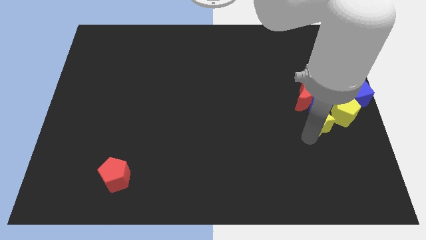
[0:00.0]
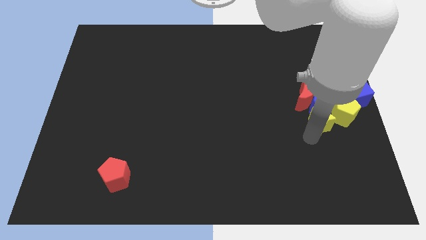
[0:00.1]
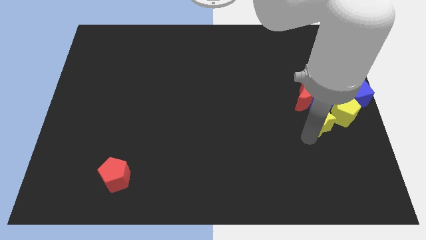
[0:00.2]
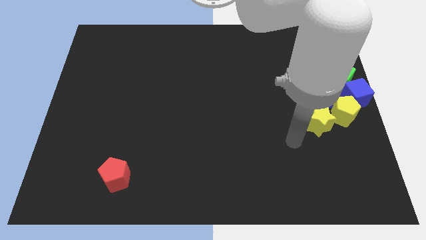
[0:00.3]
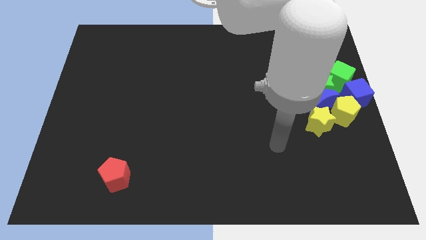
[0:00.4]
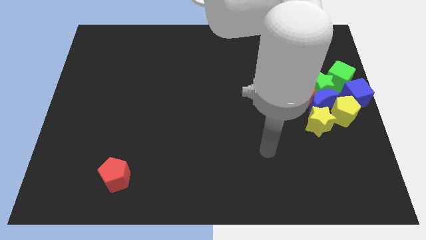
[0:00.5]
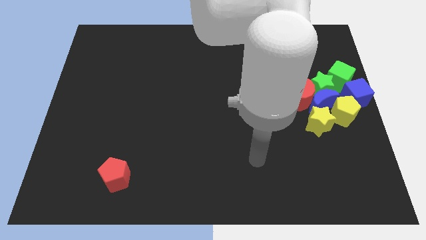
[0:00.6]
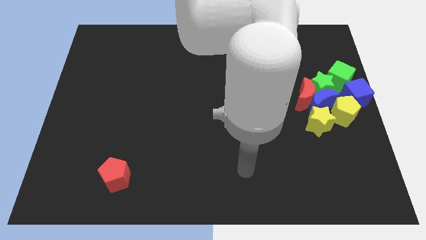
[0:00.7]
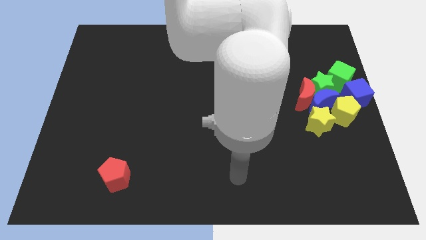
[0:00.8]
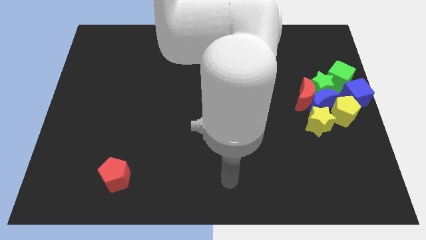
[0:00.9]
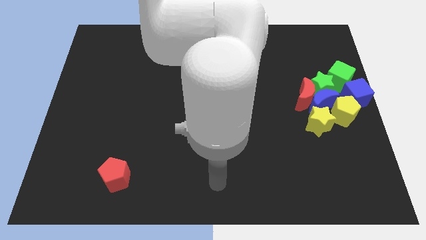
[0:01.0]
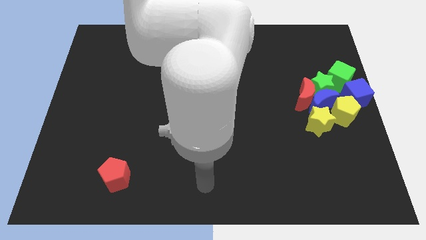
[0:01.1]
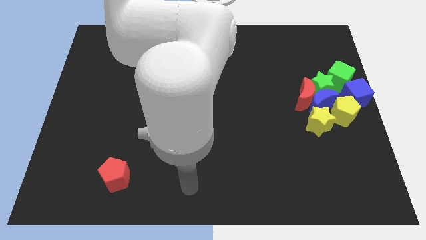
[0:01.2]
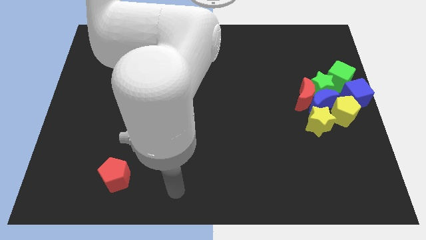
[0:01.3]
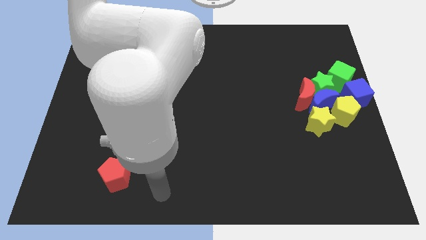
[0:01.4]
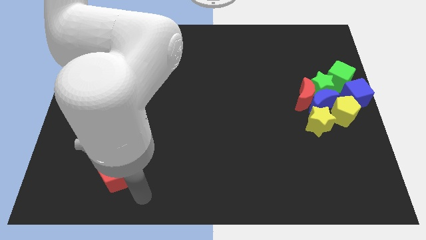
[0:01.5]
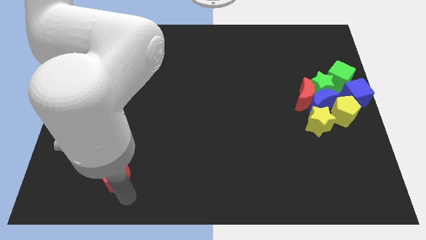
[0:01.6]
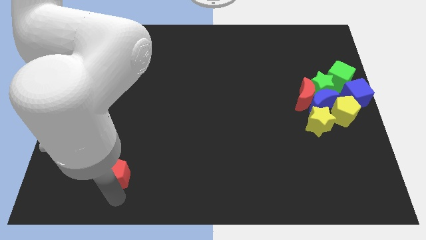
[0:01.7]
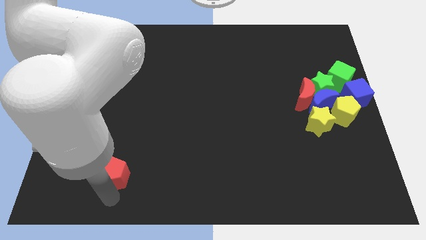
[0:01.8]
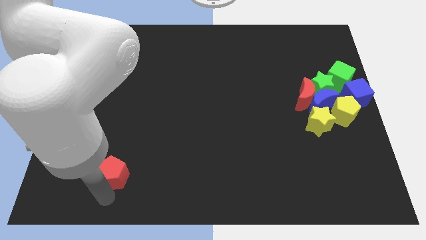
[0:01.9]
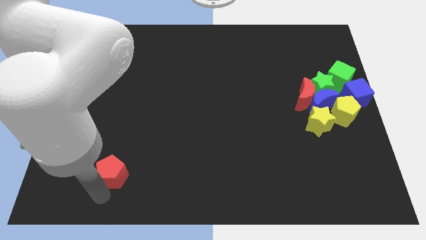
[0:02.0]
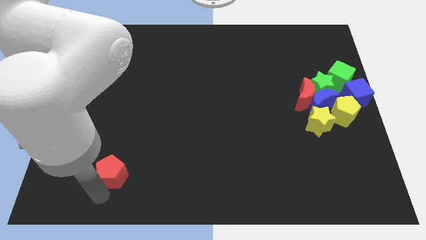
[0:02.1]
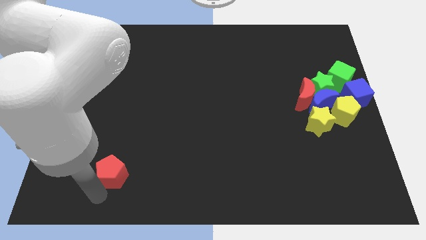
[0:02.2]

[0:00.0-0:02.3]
touch the bottom side of the red pentagon

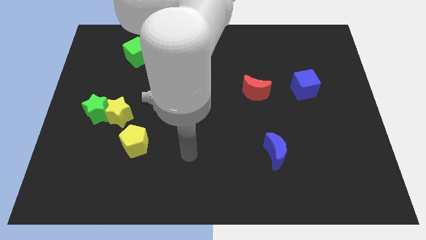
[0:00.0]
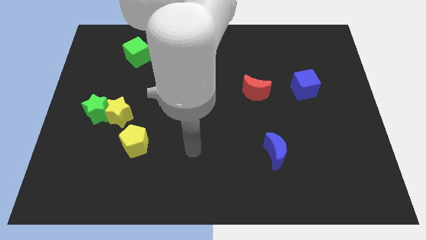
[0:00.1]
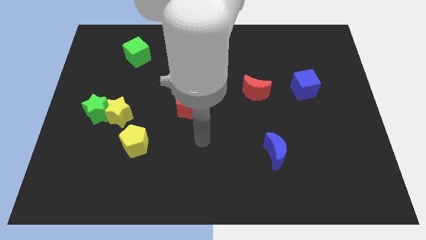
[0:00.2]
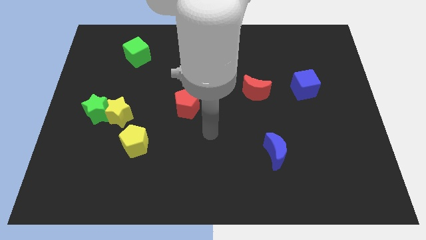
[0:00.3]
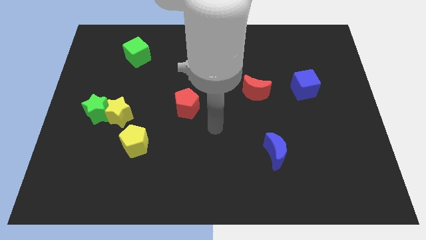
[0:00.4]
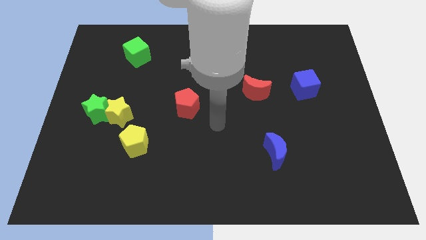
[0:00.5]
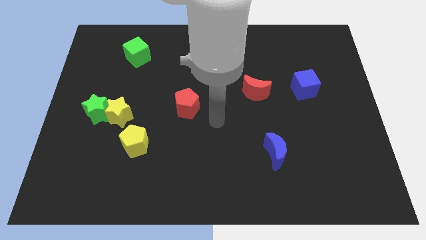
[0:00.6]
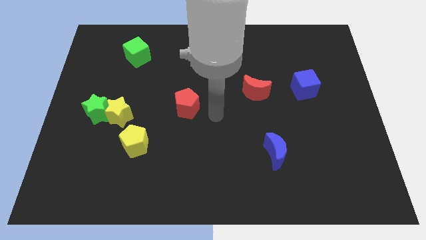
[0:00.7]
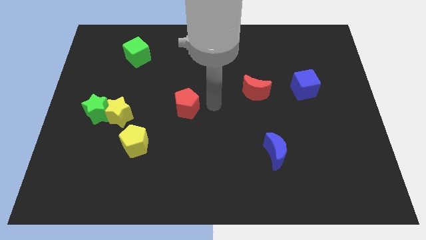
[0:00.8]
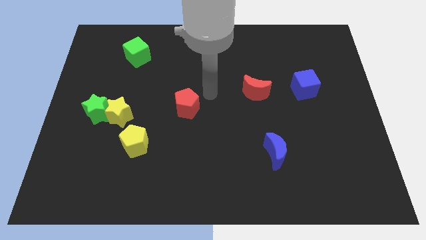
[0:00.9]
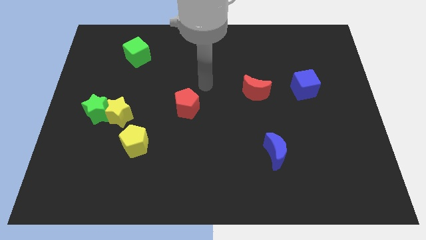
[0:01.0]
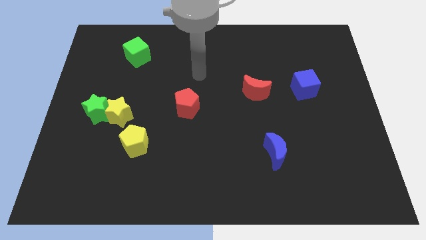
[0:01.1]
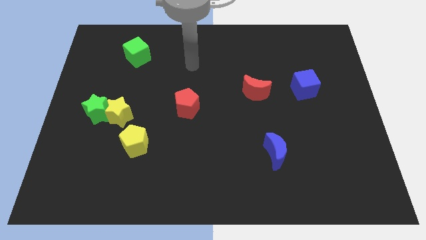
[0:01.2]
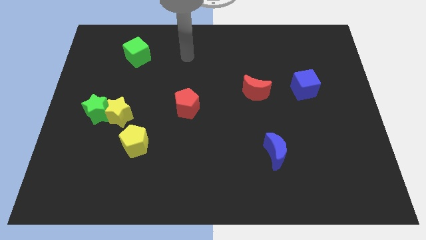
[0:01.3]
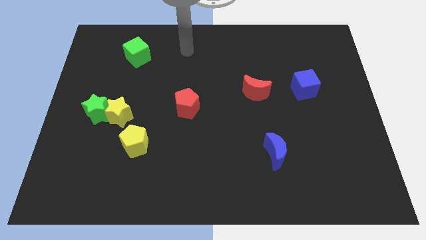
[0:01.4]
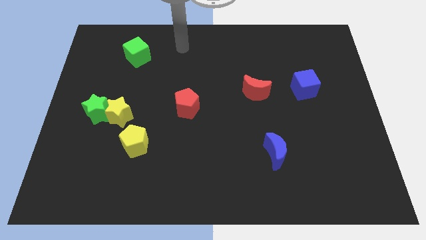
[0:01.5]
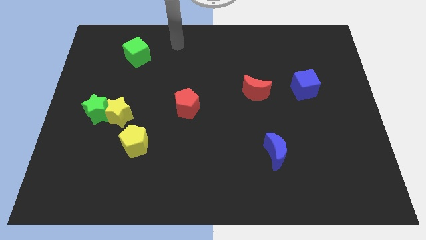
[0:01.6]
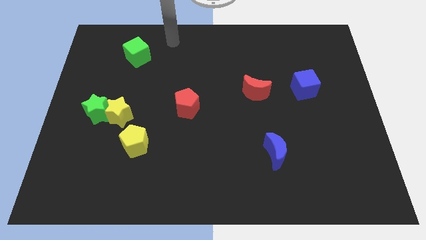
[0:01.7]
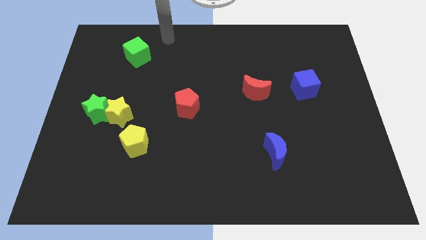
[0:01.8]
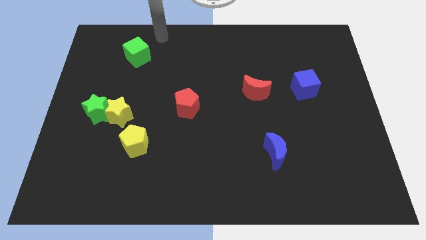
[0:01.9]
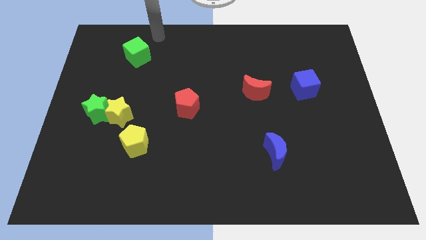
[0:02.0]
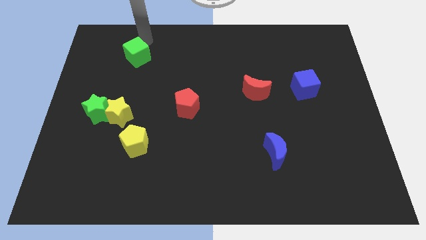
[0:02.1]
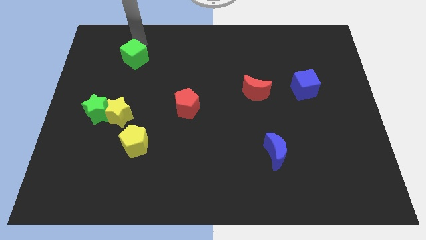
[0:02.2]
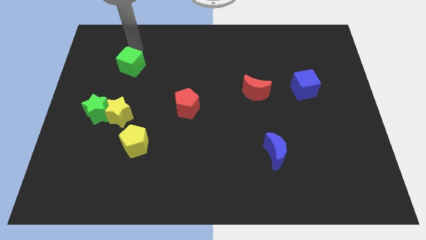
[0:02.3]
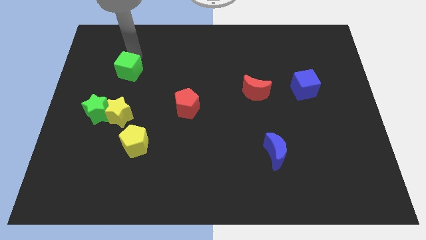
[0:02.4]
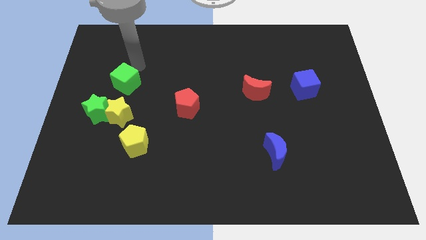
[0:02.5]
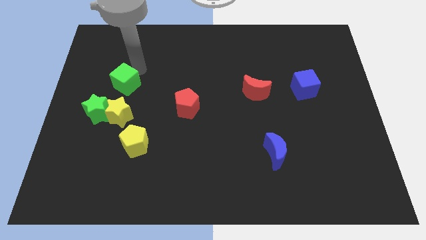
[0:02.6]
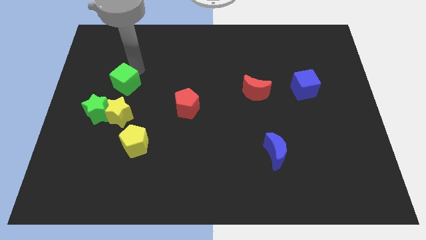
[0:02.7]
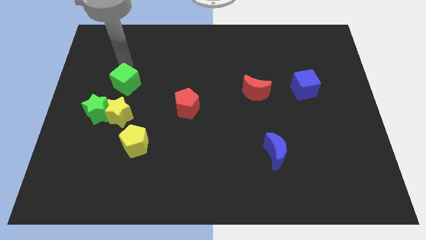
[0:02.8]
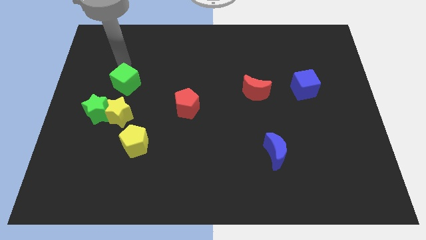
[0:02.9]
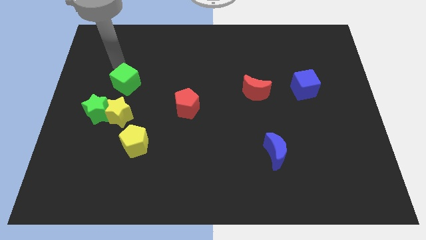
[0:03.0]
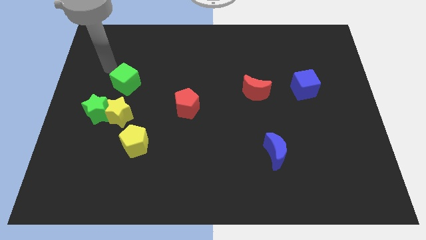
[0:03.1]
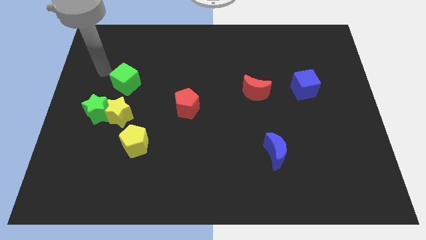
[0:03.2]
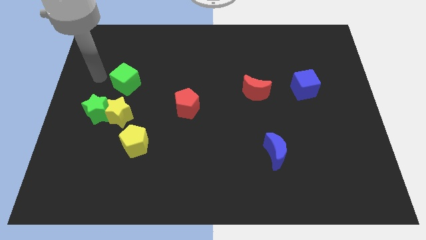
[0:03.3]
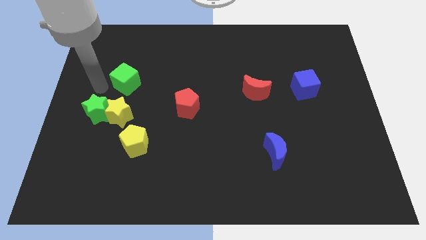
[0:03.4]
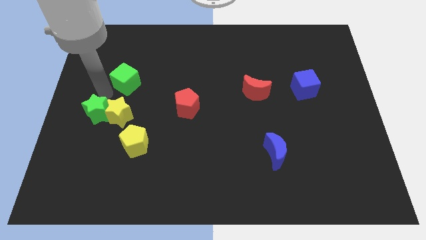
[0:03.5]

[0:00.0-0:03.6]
push the green cube to the top side of the yellow star

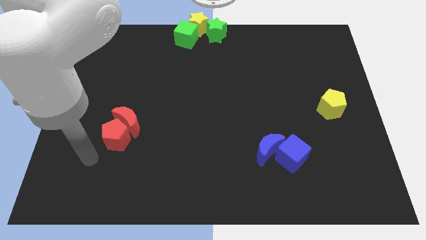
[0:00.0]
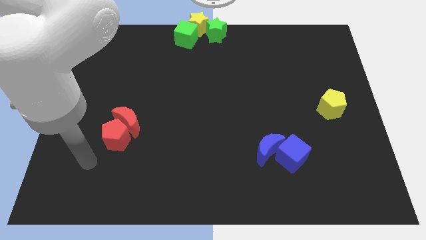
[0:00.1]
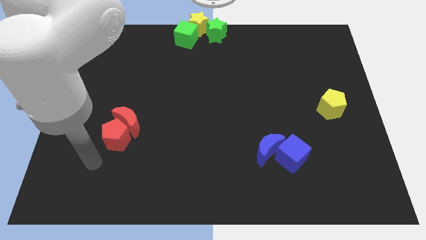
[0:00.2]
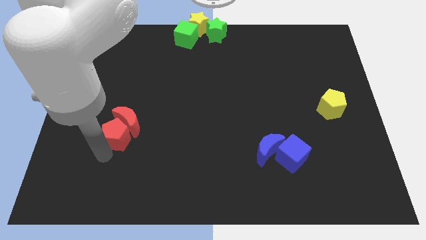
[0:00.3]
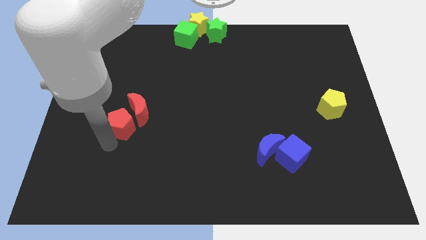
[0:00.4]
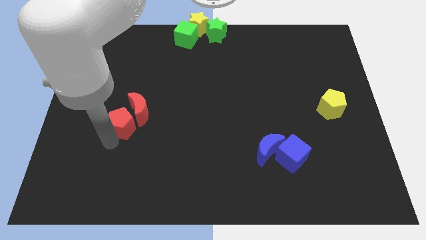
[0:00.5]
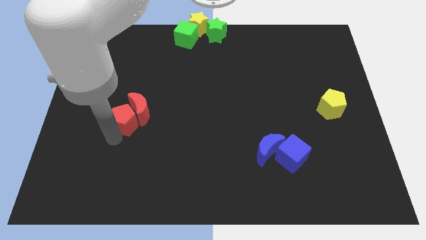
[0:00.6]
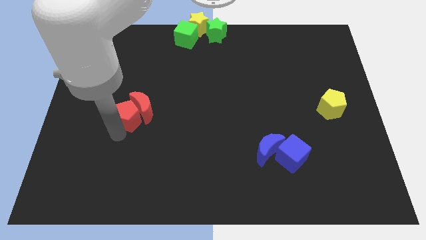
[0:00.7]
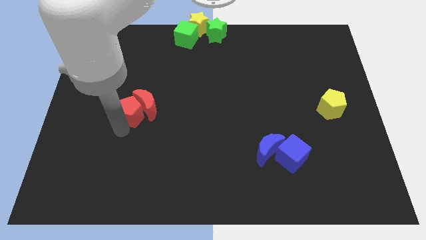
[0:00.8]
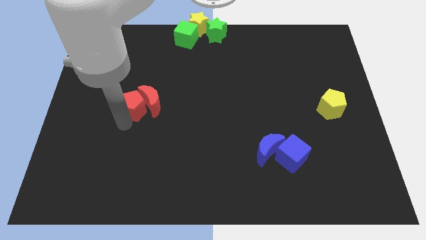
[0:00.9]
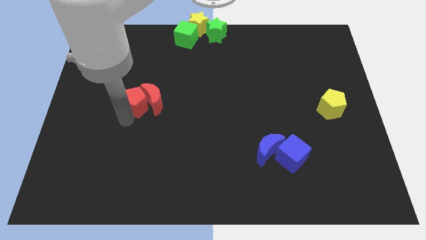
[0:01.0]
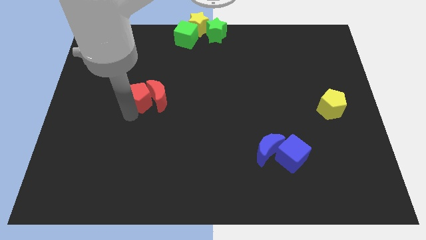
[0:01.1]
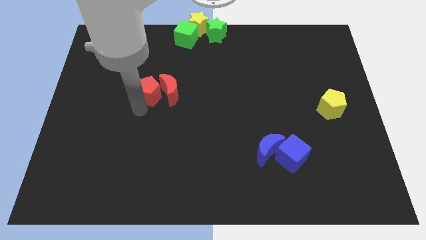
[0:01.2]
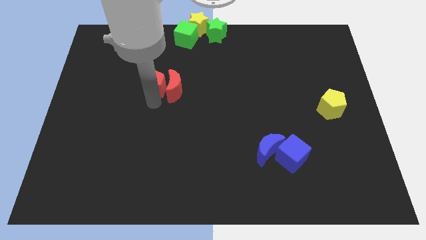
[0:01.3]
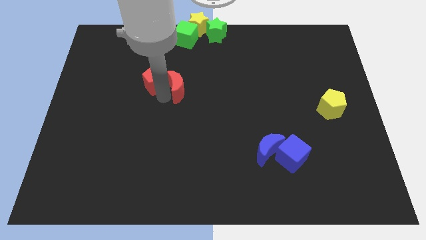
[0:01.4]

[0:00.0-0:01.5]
push the red objects towards the top center corner of the board

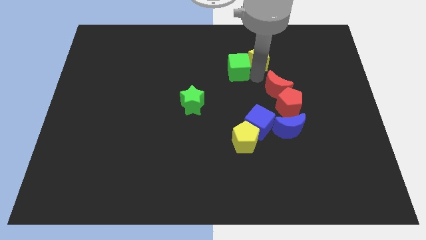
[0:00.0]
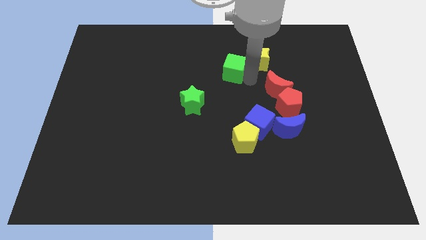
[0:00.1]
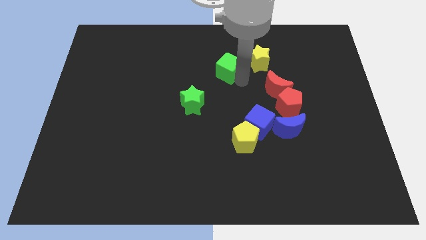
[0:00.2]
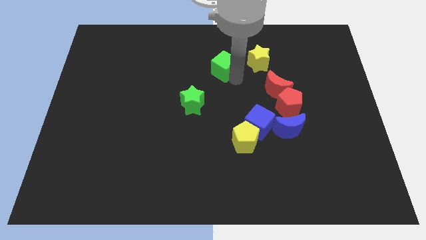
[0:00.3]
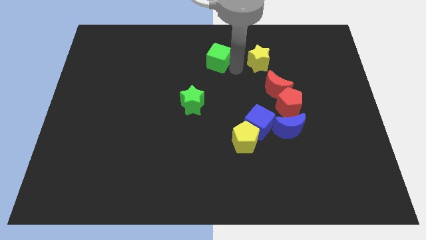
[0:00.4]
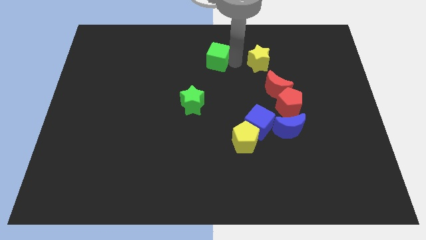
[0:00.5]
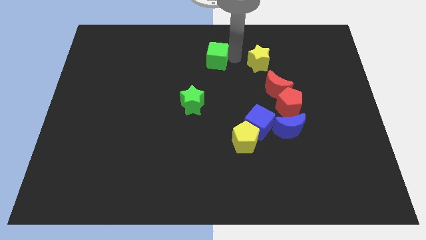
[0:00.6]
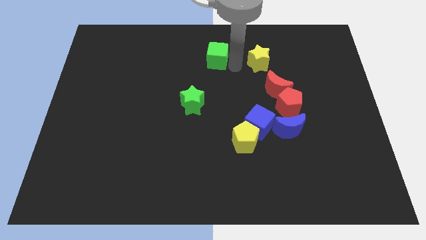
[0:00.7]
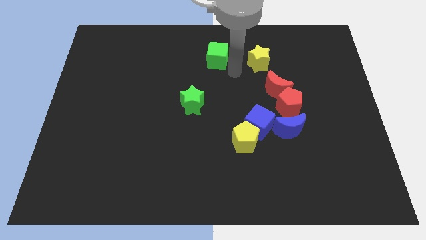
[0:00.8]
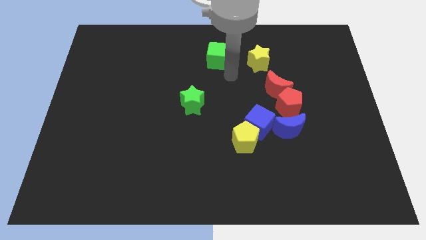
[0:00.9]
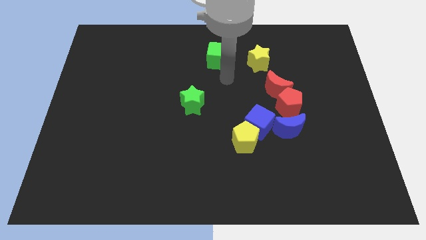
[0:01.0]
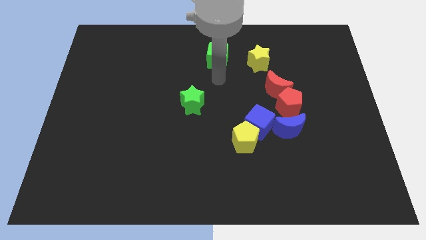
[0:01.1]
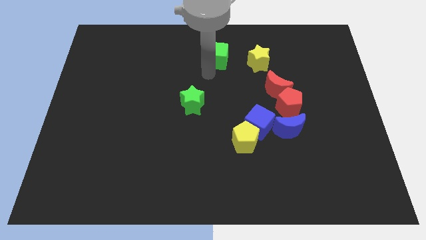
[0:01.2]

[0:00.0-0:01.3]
move the green blue to the top center of the board

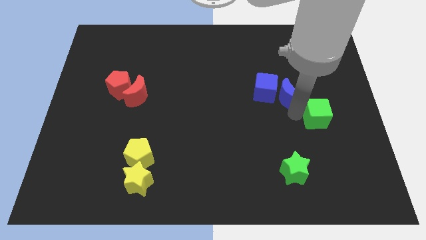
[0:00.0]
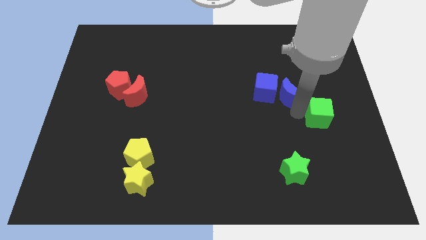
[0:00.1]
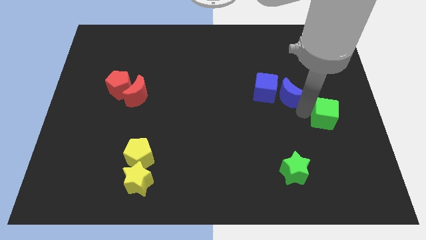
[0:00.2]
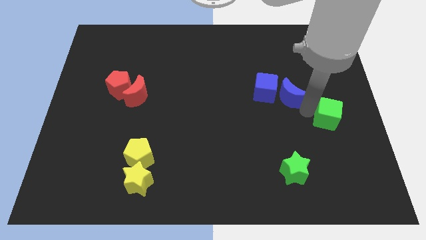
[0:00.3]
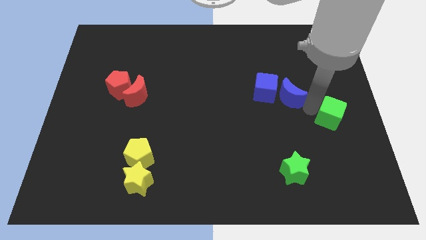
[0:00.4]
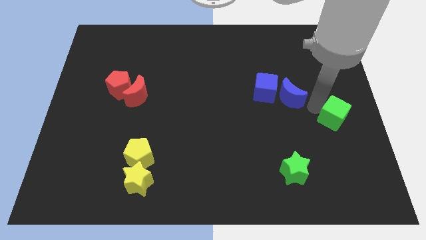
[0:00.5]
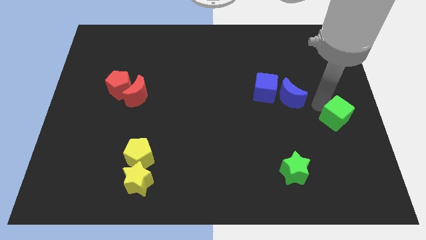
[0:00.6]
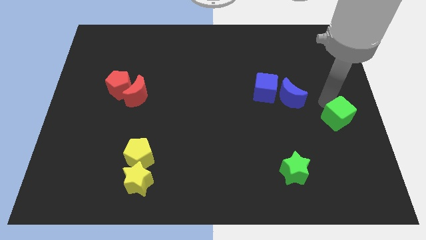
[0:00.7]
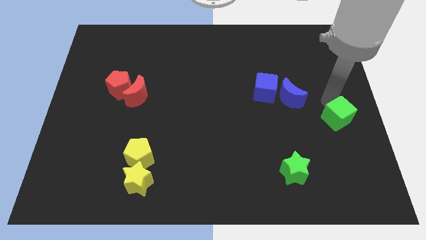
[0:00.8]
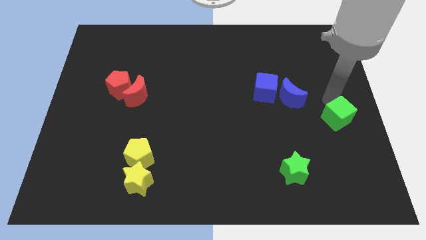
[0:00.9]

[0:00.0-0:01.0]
separate green cube from blue moon
